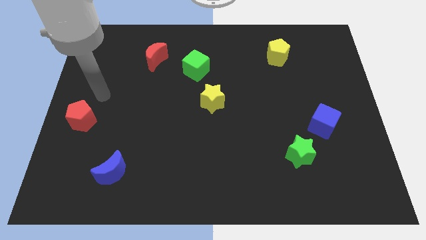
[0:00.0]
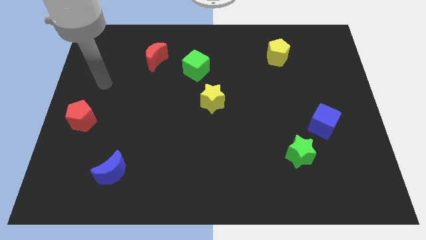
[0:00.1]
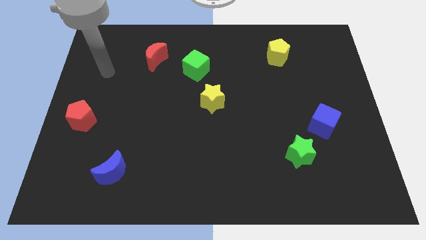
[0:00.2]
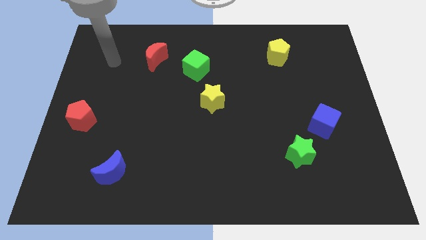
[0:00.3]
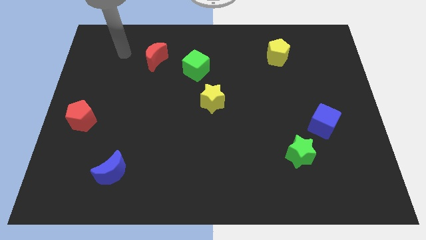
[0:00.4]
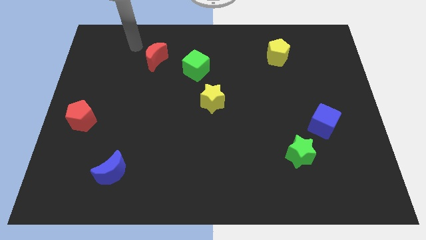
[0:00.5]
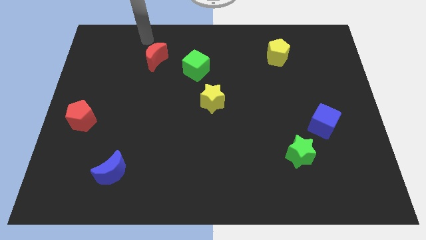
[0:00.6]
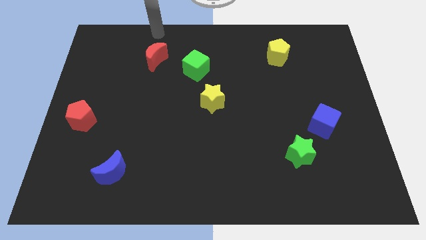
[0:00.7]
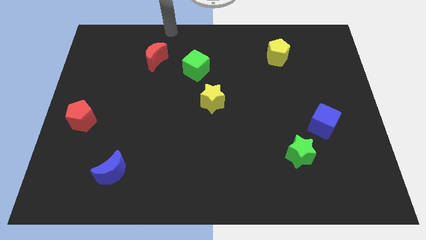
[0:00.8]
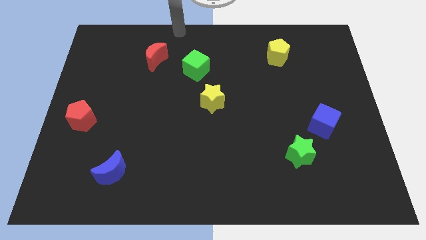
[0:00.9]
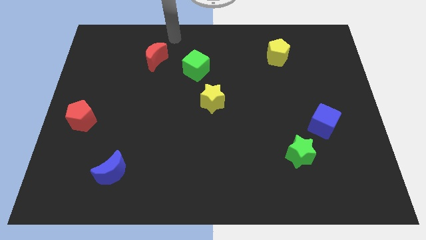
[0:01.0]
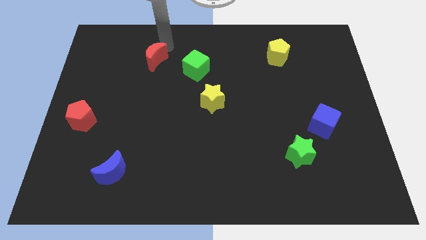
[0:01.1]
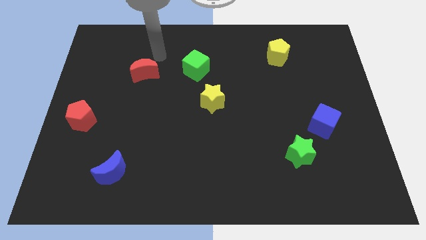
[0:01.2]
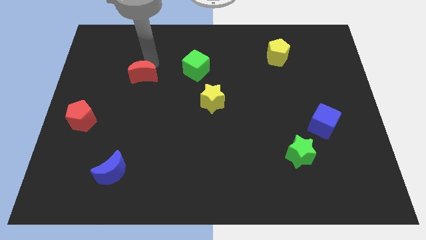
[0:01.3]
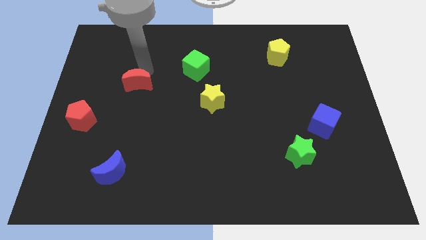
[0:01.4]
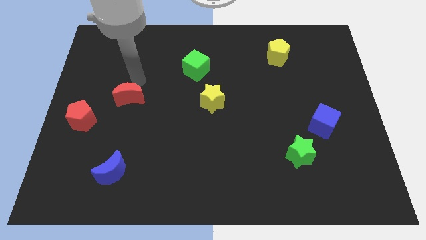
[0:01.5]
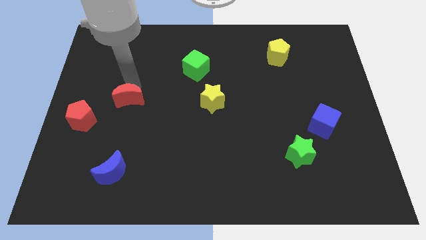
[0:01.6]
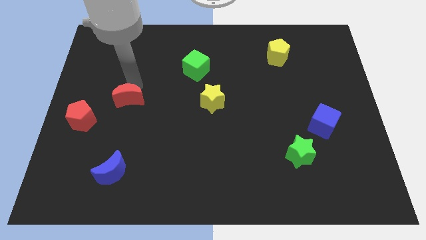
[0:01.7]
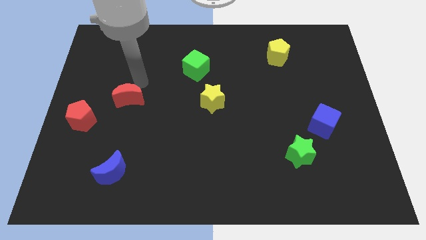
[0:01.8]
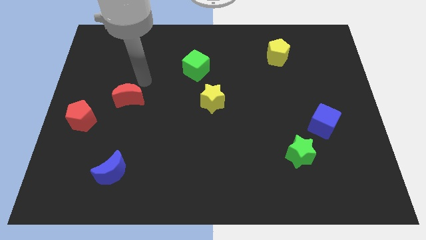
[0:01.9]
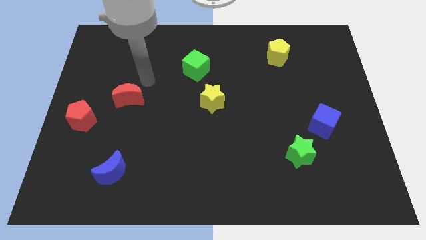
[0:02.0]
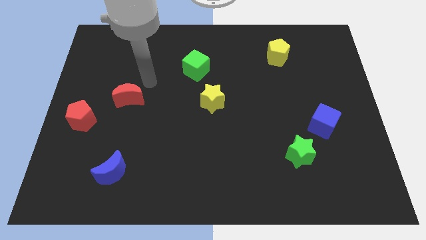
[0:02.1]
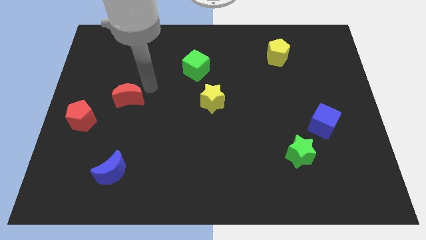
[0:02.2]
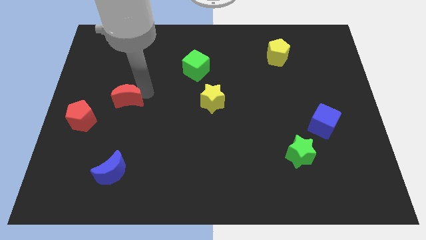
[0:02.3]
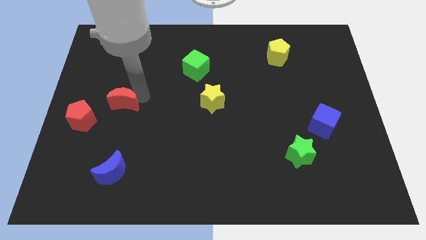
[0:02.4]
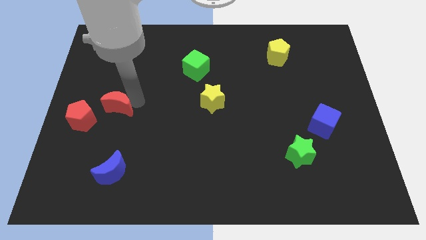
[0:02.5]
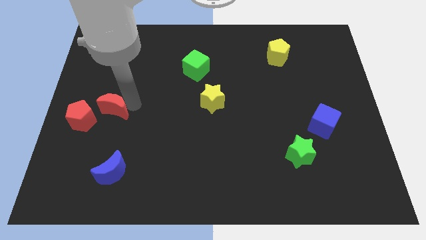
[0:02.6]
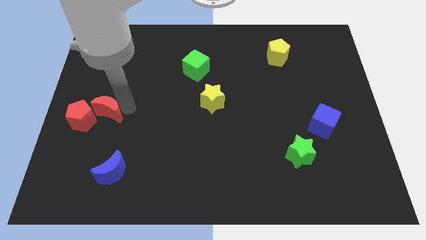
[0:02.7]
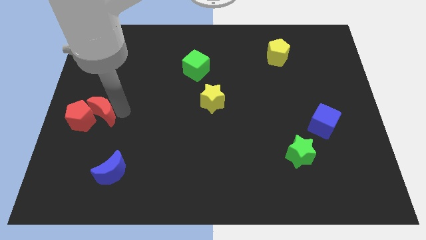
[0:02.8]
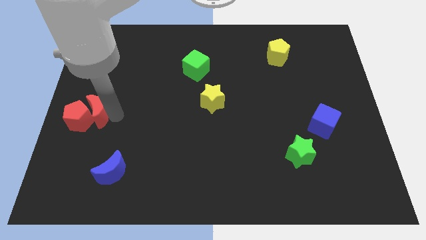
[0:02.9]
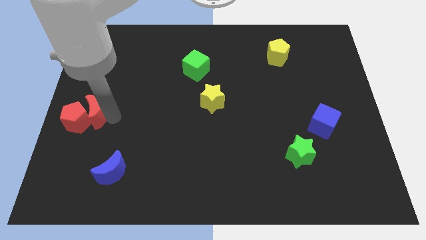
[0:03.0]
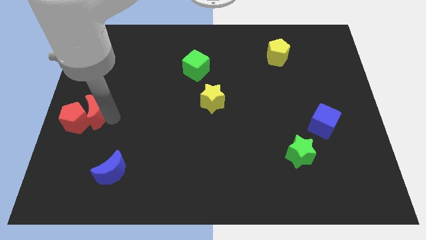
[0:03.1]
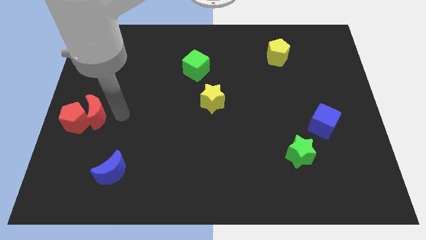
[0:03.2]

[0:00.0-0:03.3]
push the red crescent into the red pentagon

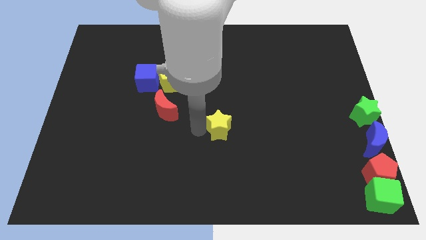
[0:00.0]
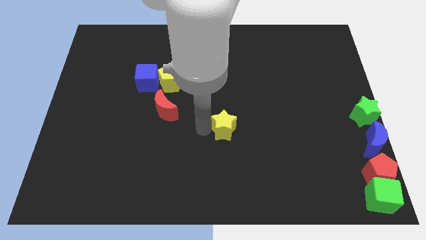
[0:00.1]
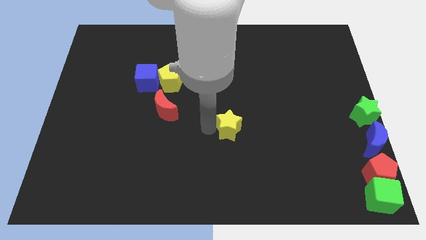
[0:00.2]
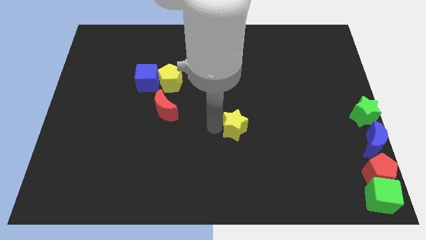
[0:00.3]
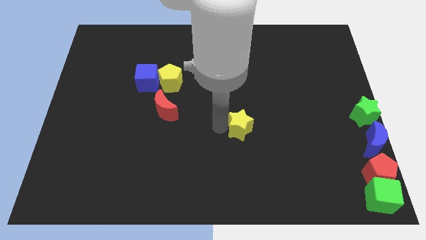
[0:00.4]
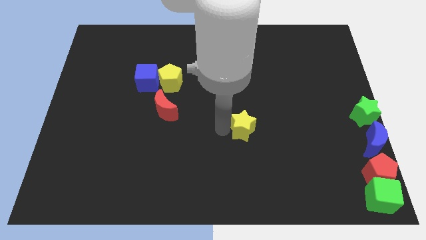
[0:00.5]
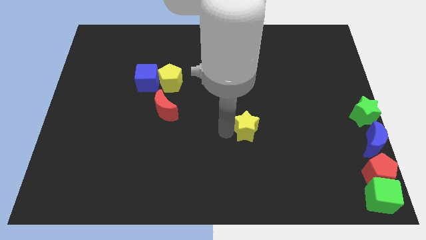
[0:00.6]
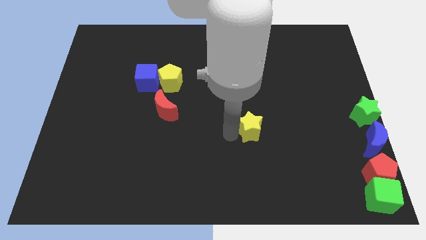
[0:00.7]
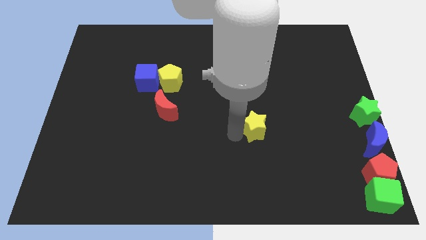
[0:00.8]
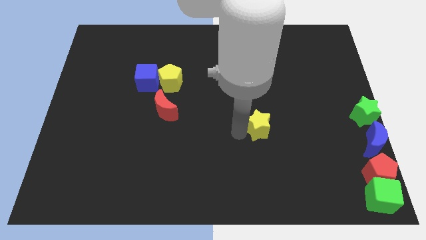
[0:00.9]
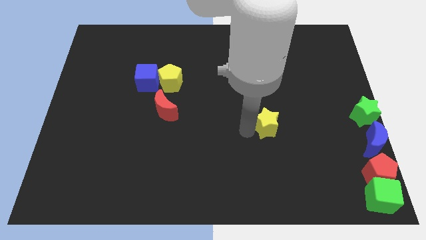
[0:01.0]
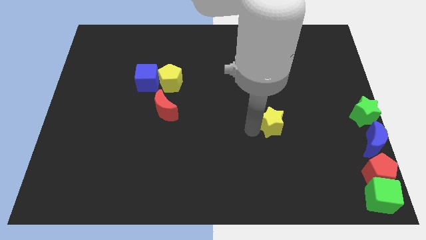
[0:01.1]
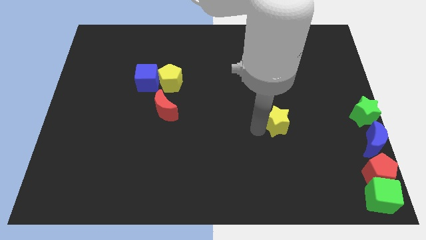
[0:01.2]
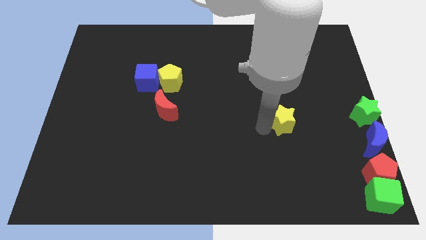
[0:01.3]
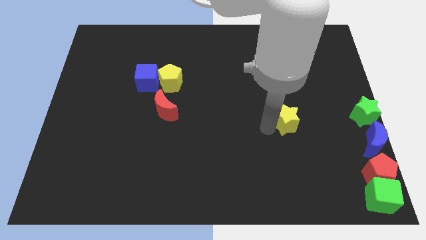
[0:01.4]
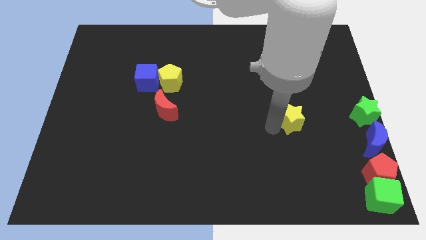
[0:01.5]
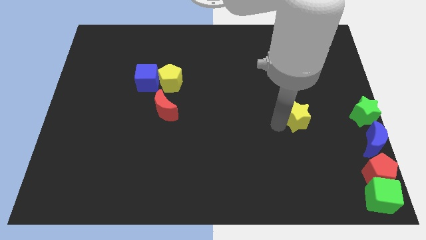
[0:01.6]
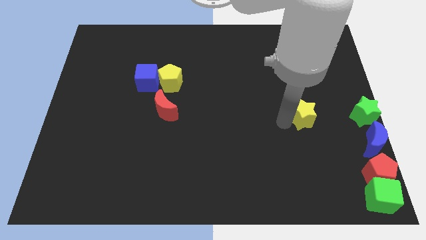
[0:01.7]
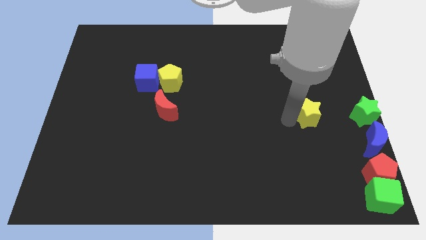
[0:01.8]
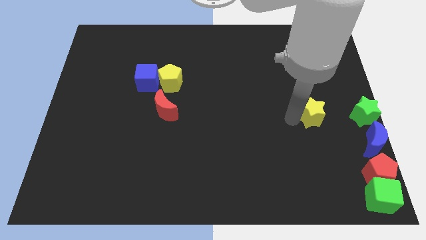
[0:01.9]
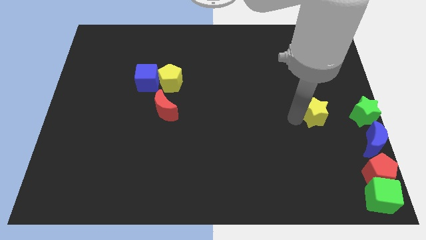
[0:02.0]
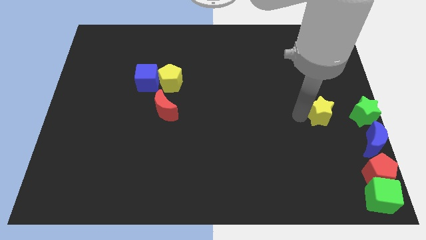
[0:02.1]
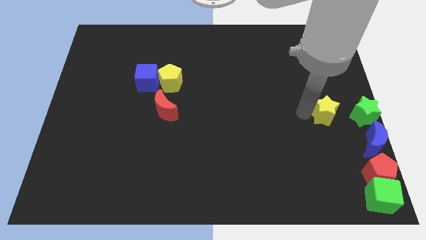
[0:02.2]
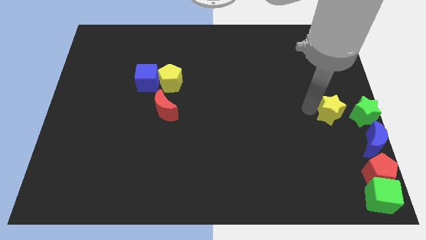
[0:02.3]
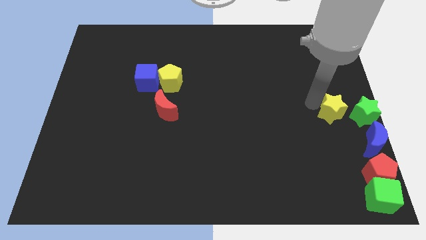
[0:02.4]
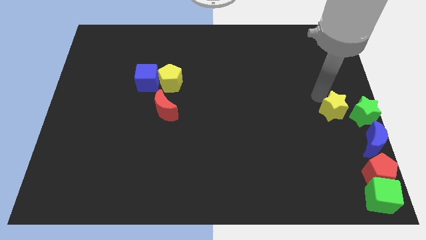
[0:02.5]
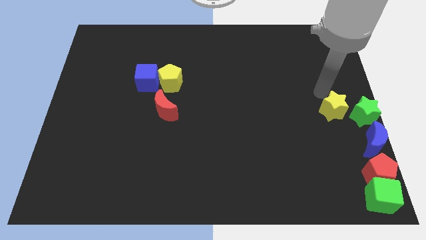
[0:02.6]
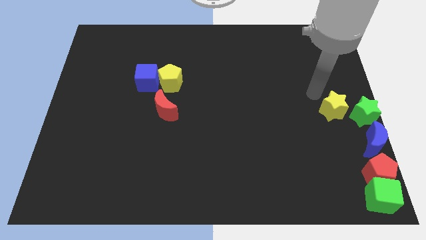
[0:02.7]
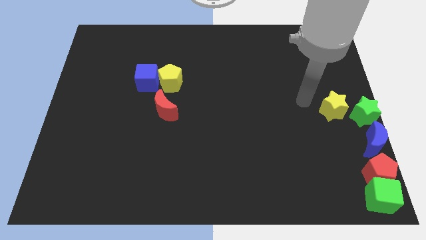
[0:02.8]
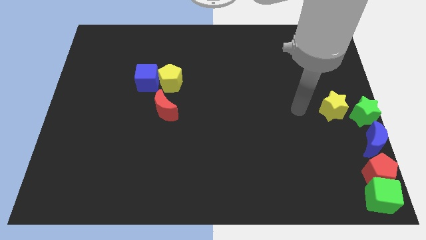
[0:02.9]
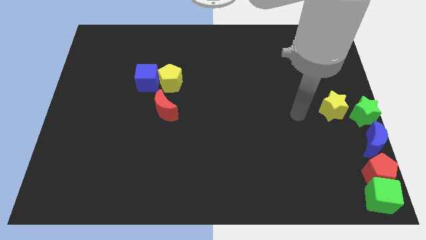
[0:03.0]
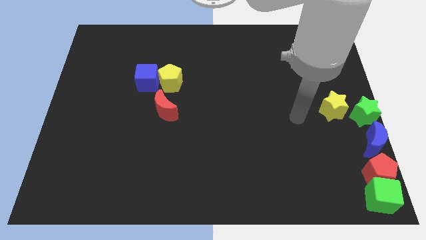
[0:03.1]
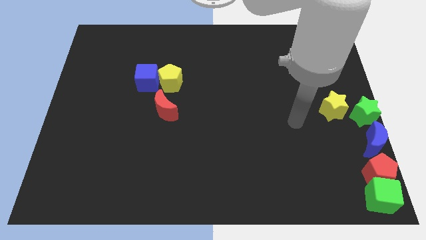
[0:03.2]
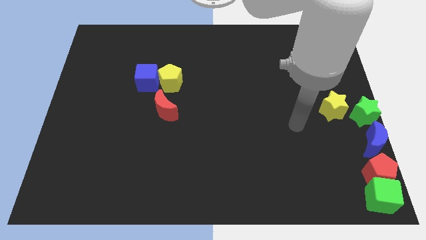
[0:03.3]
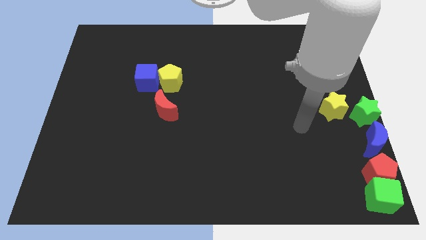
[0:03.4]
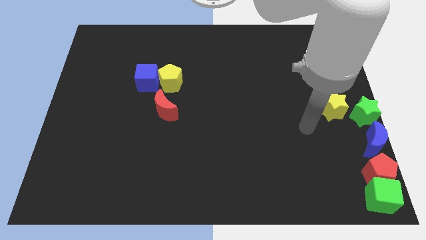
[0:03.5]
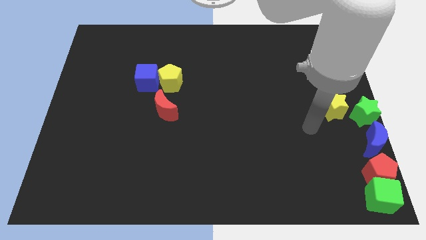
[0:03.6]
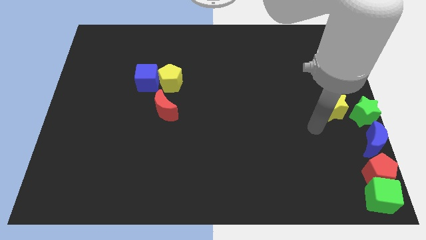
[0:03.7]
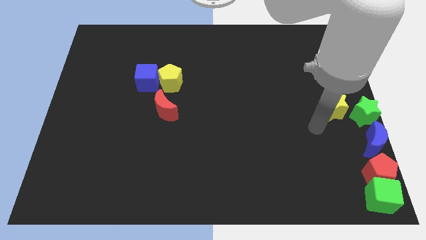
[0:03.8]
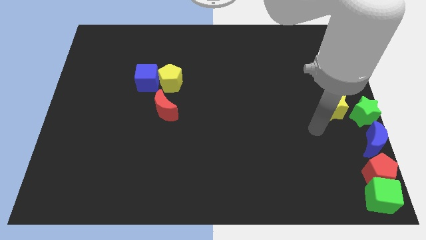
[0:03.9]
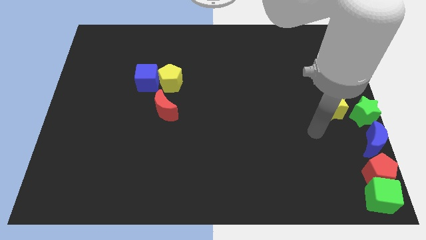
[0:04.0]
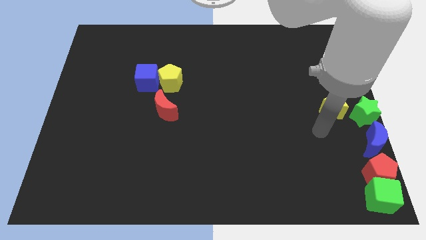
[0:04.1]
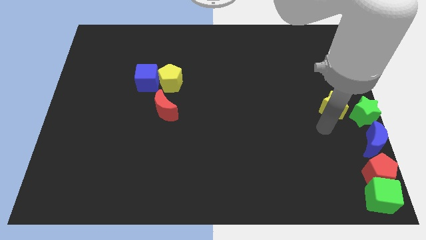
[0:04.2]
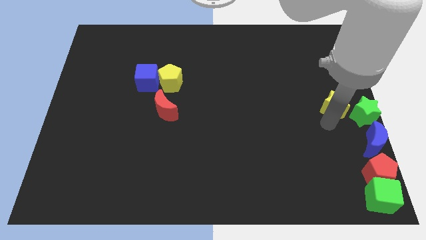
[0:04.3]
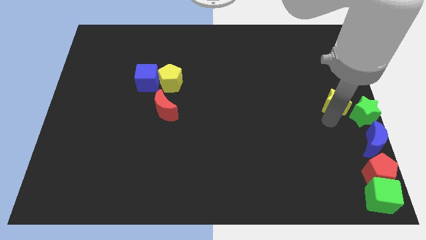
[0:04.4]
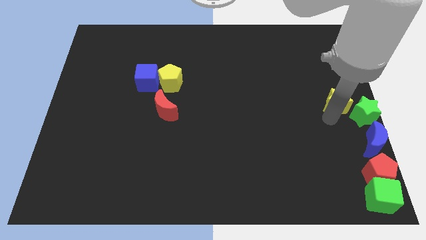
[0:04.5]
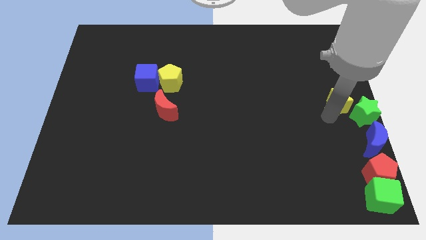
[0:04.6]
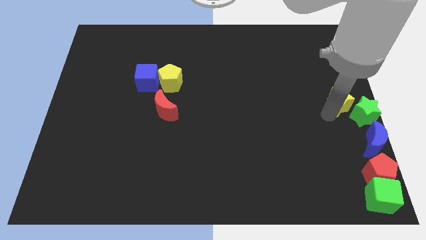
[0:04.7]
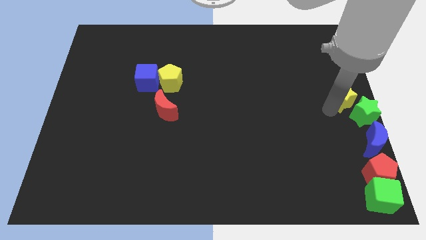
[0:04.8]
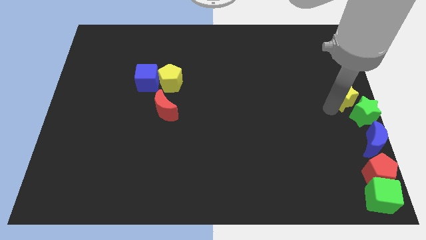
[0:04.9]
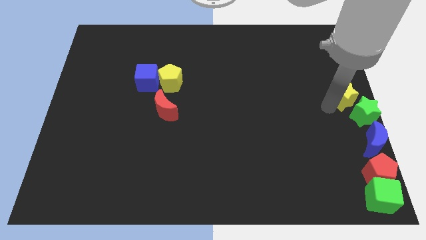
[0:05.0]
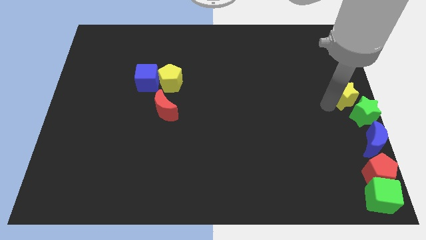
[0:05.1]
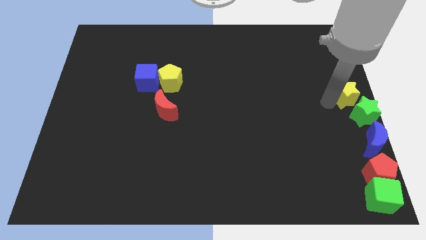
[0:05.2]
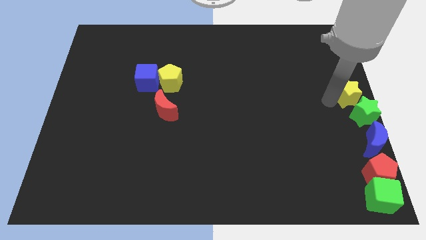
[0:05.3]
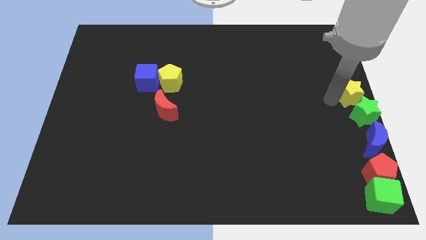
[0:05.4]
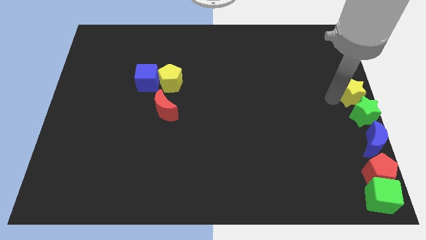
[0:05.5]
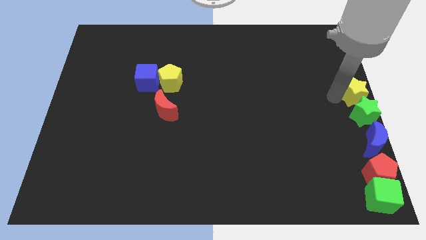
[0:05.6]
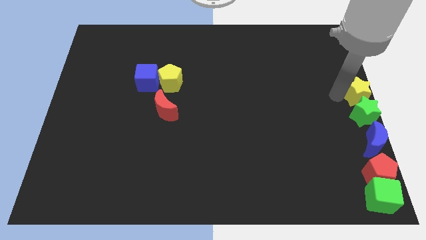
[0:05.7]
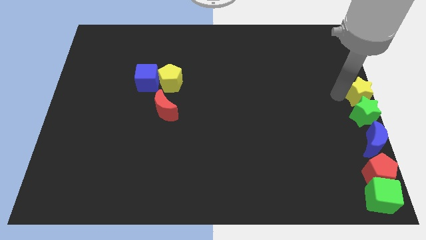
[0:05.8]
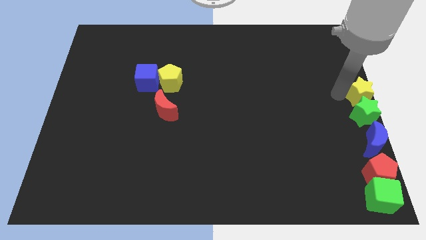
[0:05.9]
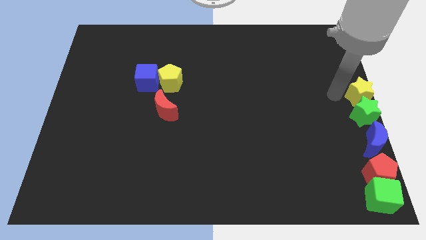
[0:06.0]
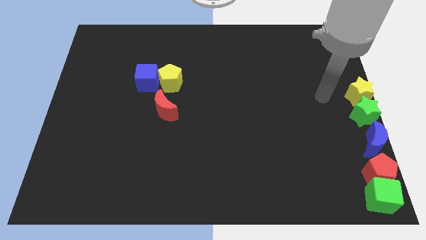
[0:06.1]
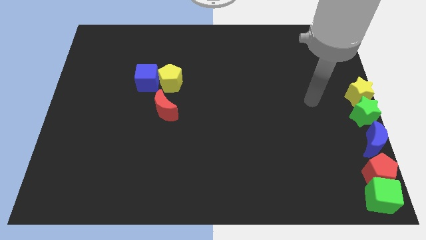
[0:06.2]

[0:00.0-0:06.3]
move yellow star to the top of green star
